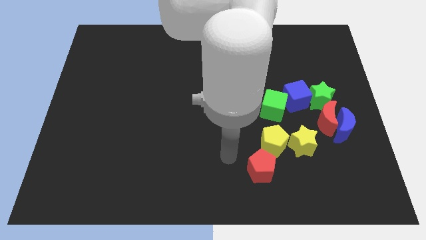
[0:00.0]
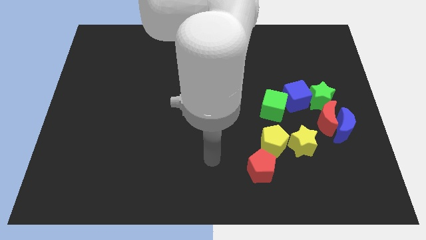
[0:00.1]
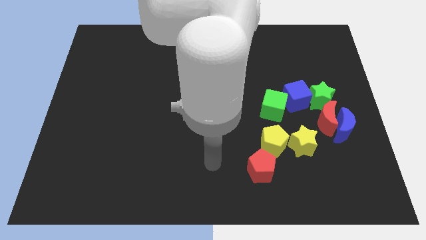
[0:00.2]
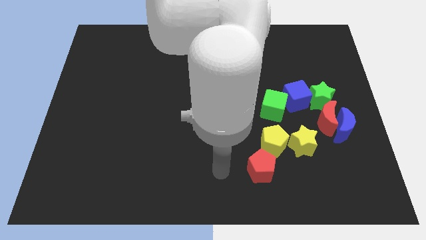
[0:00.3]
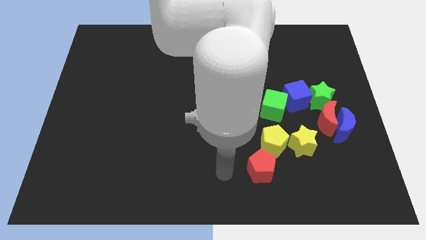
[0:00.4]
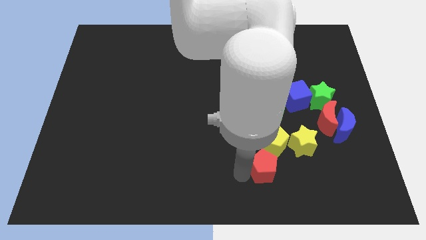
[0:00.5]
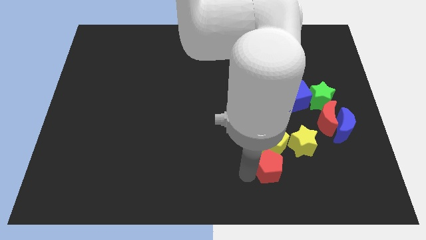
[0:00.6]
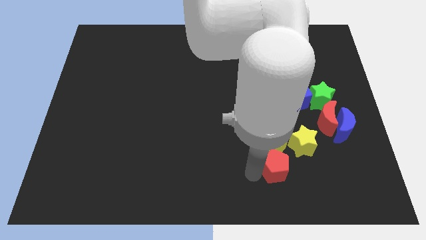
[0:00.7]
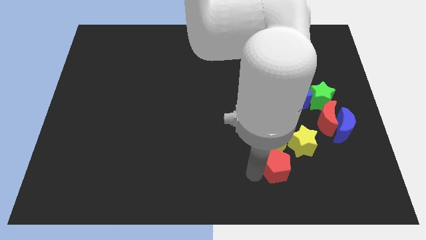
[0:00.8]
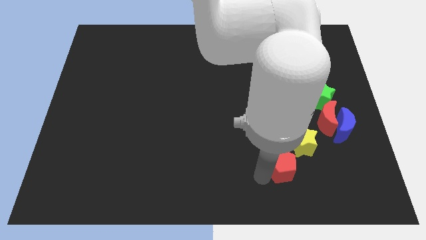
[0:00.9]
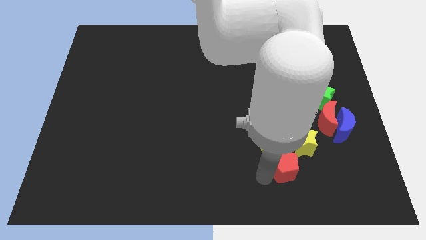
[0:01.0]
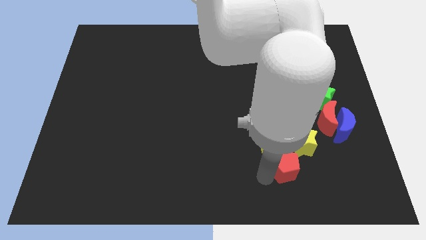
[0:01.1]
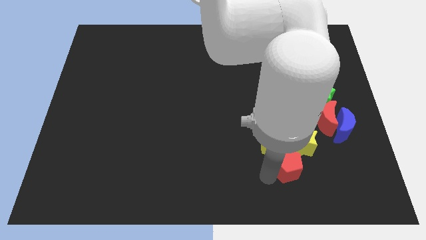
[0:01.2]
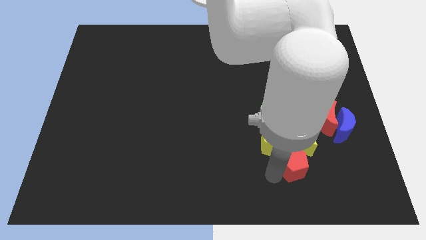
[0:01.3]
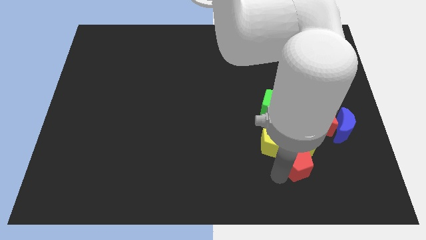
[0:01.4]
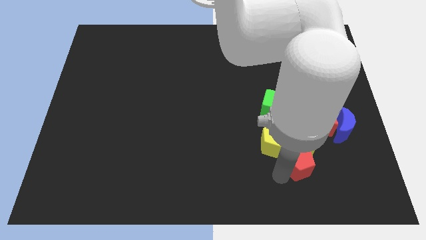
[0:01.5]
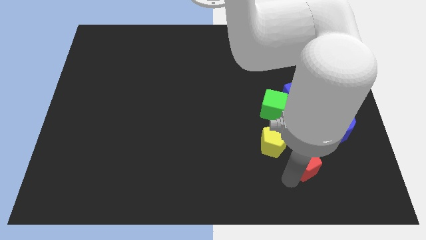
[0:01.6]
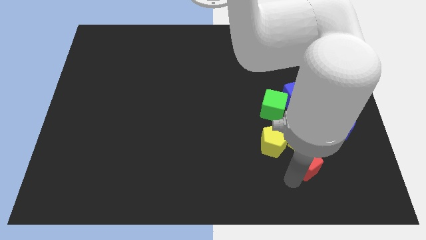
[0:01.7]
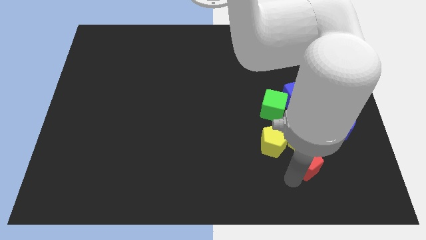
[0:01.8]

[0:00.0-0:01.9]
move the red pentagon into the group of blocks

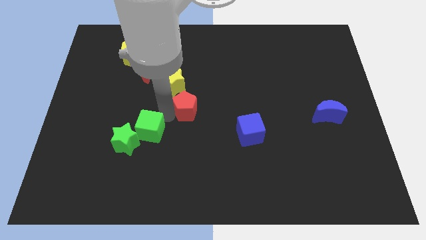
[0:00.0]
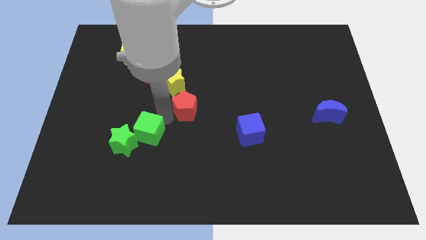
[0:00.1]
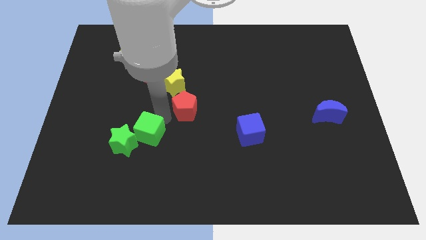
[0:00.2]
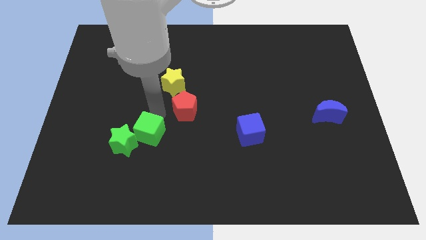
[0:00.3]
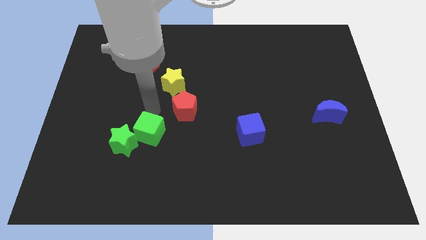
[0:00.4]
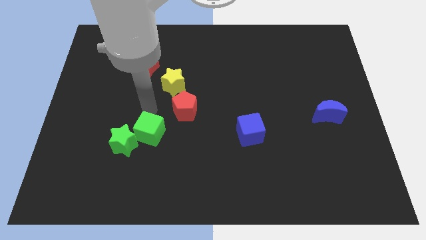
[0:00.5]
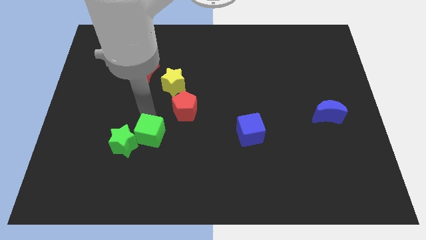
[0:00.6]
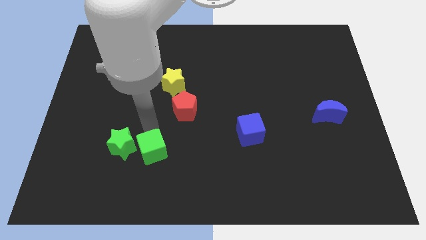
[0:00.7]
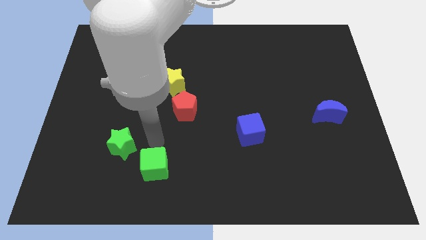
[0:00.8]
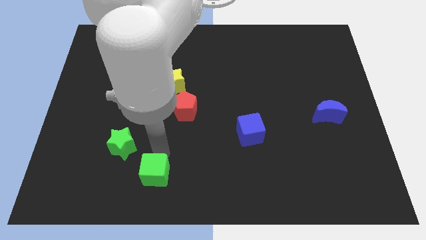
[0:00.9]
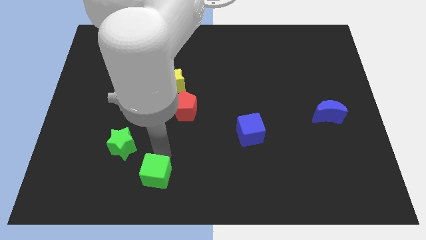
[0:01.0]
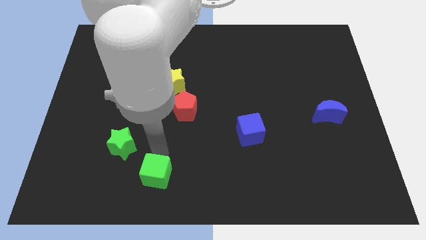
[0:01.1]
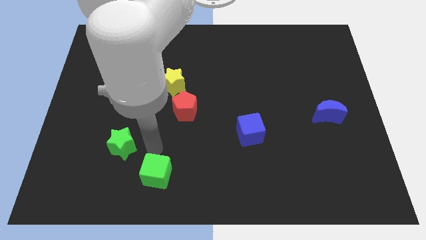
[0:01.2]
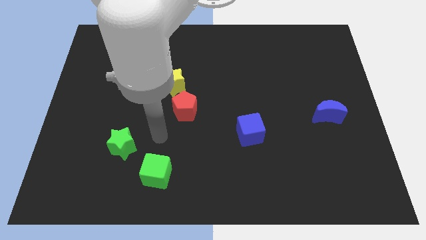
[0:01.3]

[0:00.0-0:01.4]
move the green cube to the bottom of the board

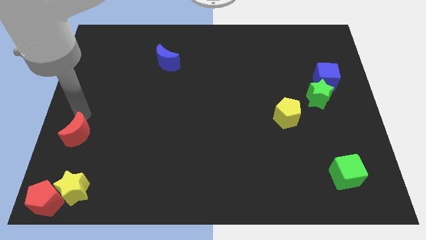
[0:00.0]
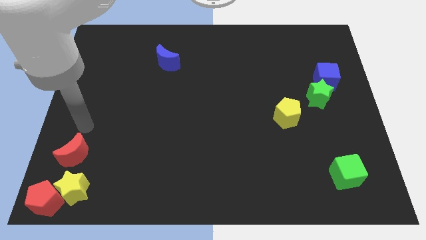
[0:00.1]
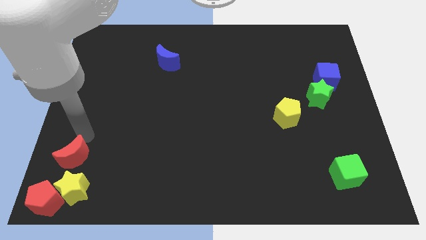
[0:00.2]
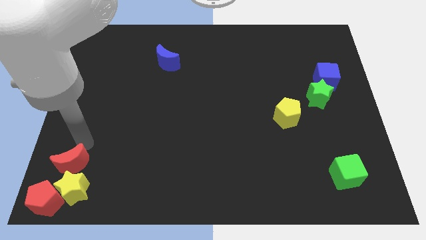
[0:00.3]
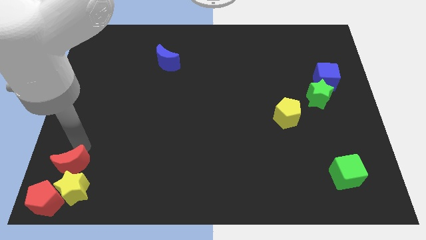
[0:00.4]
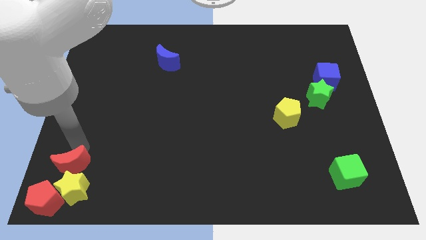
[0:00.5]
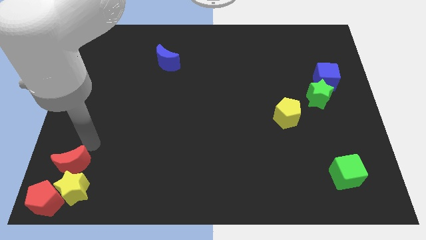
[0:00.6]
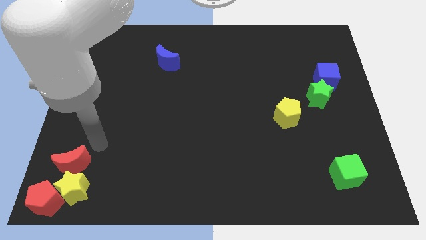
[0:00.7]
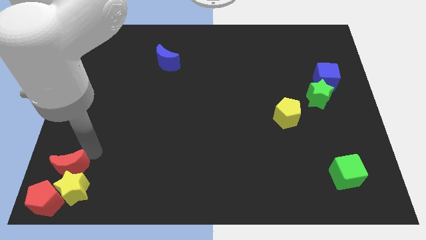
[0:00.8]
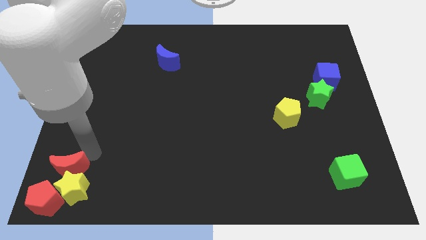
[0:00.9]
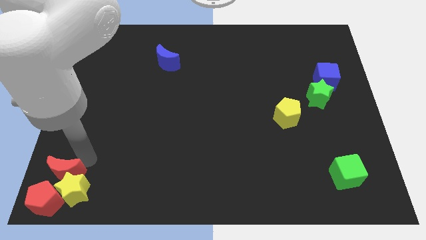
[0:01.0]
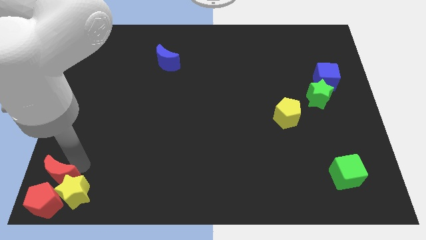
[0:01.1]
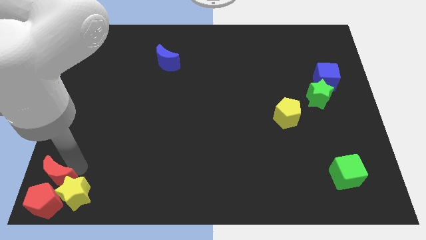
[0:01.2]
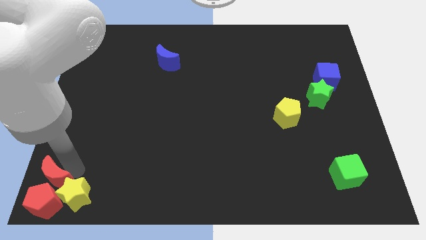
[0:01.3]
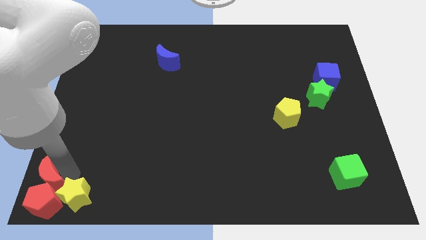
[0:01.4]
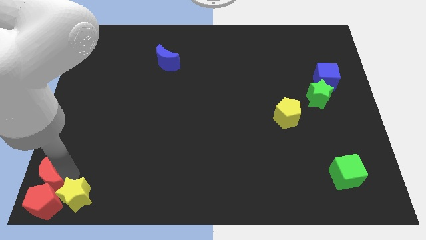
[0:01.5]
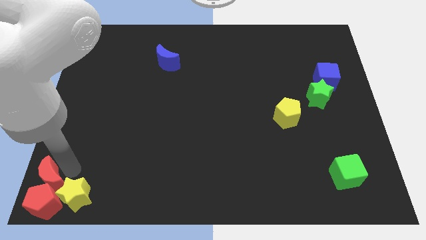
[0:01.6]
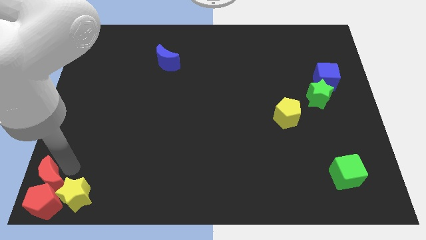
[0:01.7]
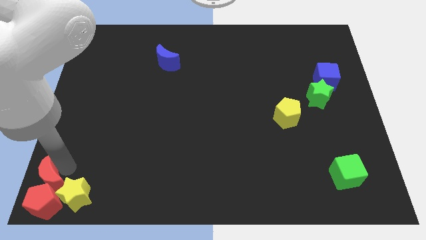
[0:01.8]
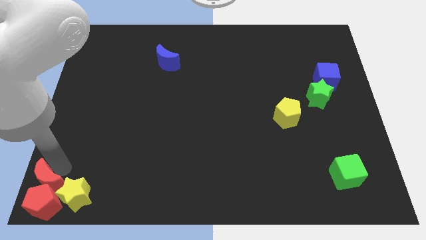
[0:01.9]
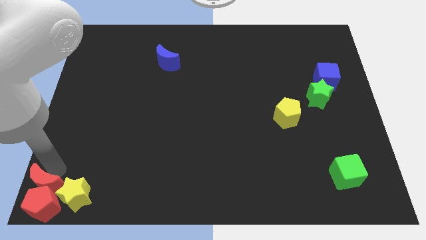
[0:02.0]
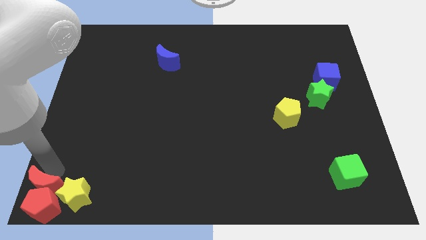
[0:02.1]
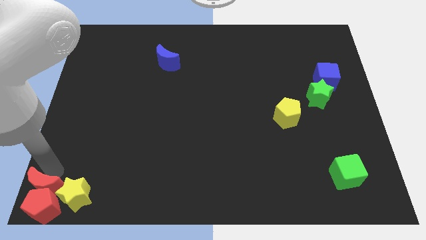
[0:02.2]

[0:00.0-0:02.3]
place red crescent above red pentagon

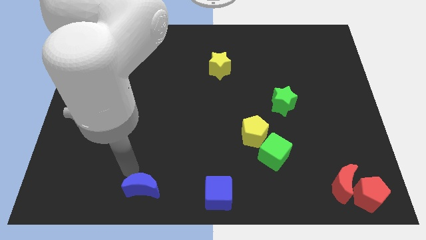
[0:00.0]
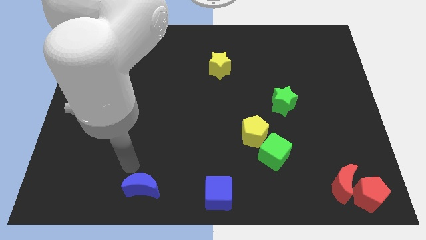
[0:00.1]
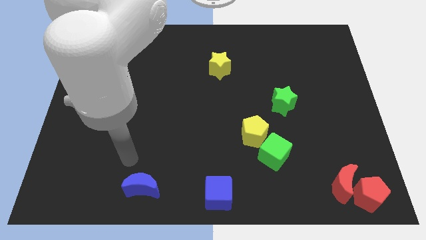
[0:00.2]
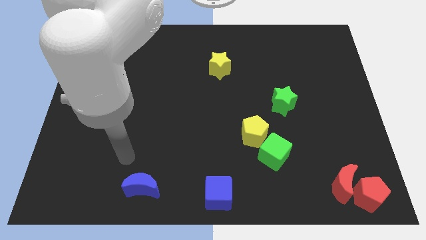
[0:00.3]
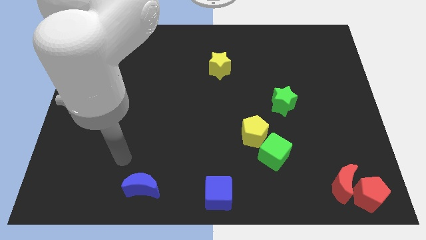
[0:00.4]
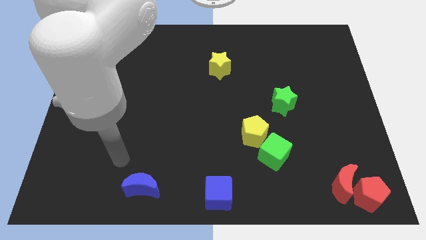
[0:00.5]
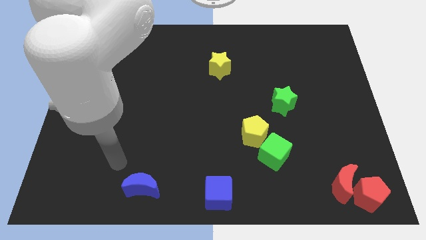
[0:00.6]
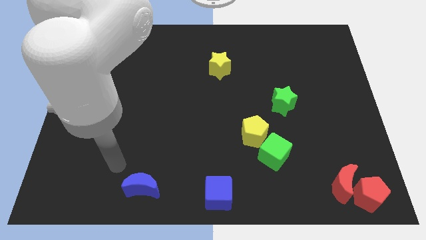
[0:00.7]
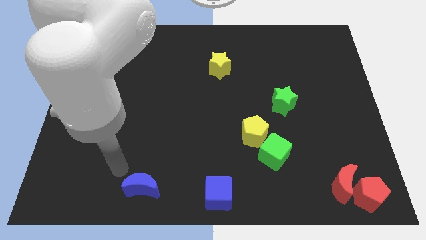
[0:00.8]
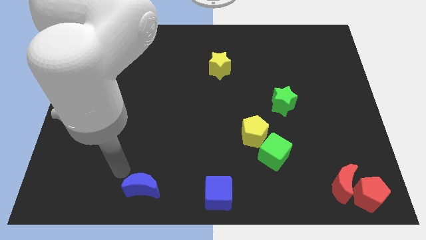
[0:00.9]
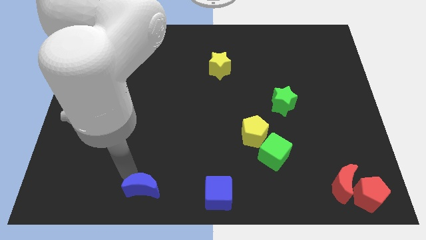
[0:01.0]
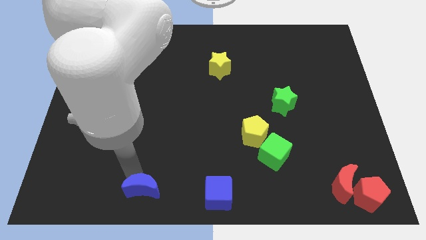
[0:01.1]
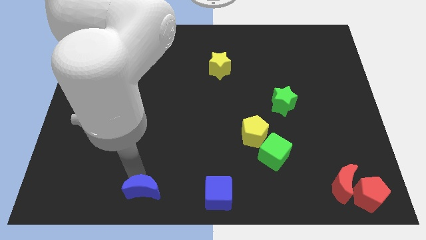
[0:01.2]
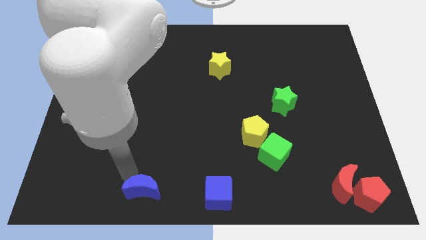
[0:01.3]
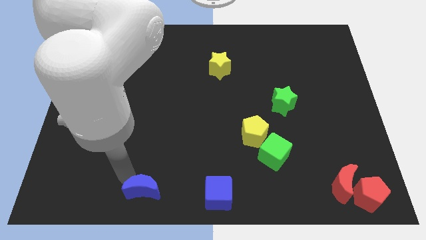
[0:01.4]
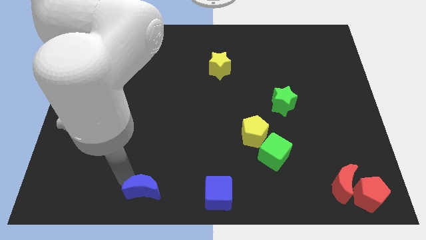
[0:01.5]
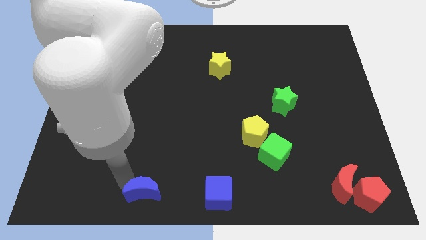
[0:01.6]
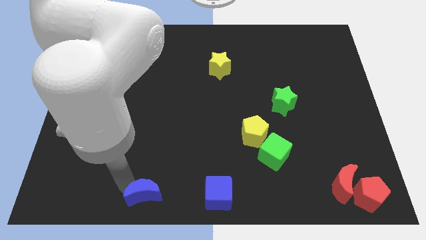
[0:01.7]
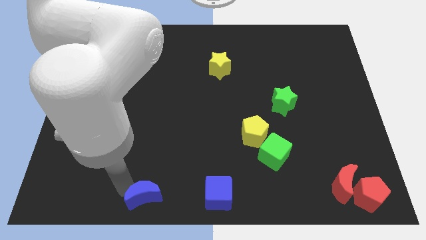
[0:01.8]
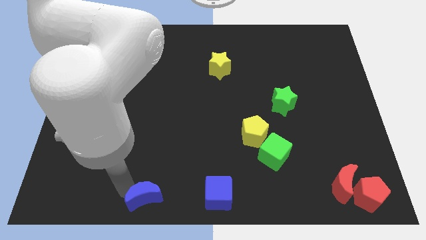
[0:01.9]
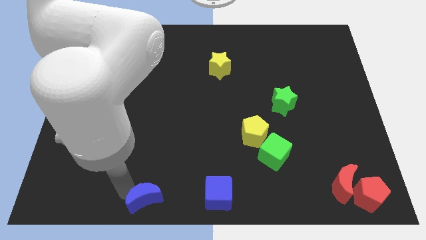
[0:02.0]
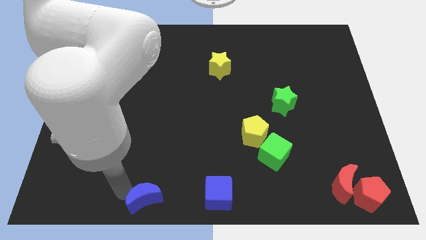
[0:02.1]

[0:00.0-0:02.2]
place blue moon to the left of blue cube

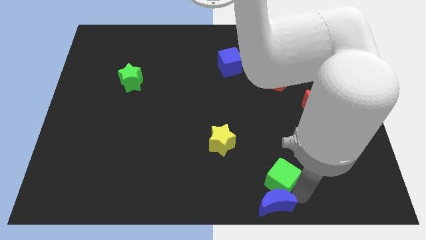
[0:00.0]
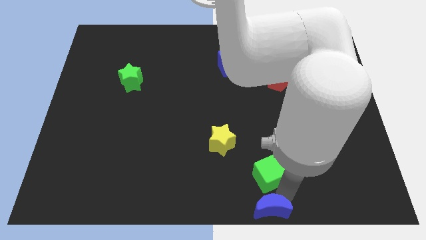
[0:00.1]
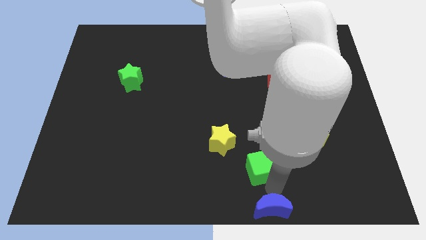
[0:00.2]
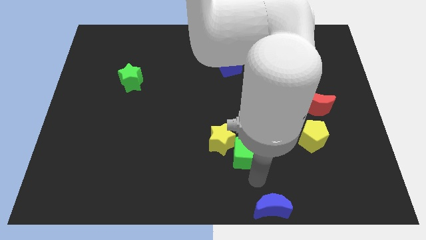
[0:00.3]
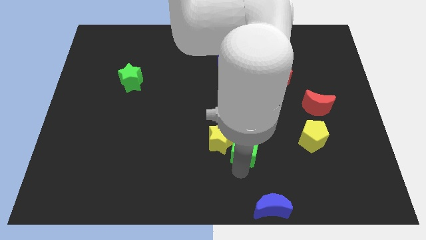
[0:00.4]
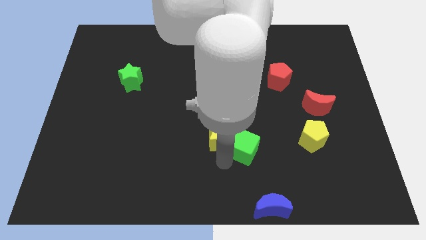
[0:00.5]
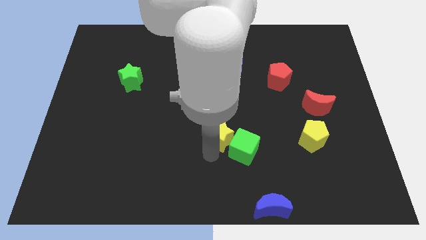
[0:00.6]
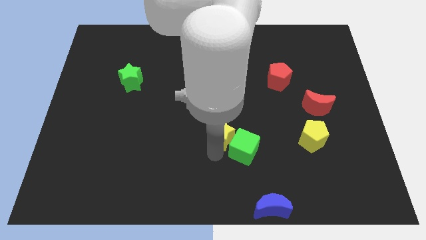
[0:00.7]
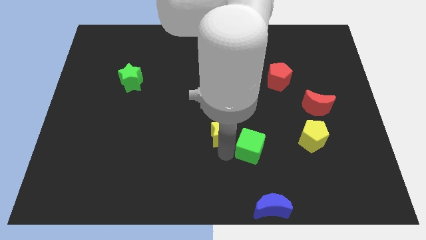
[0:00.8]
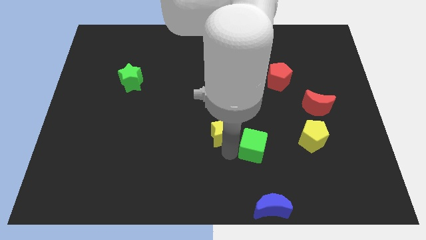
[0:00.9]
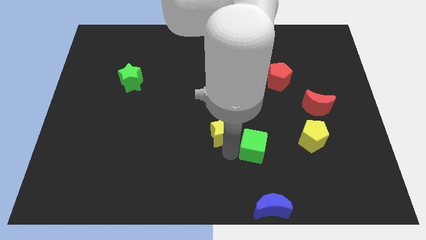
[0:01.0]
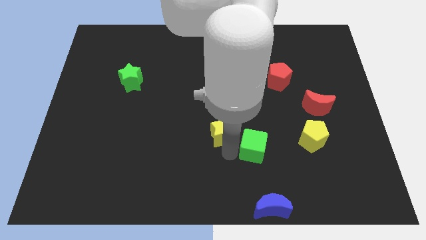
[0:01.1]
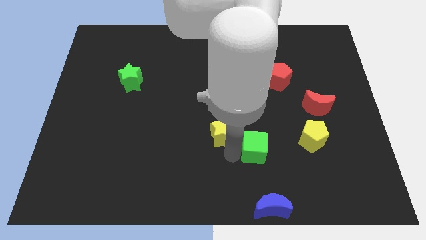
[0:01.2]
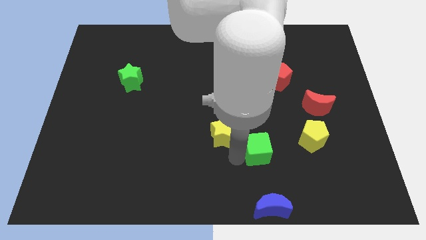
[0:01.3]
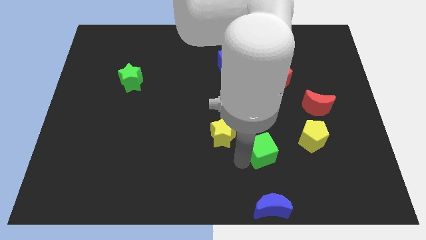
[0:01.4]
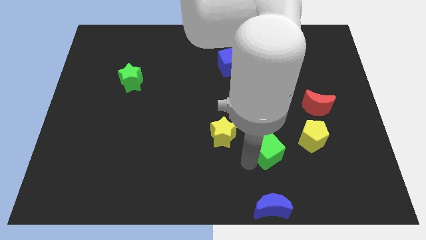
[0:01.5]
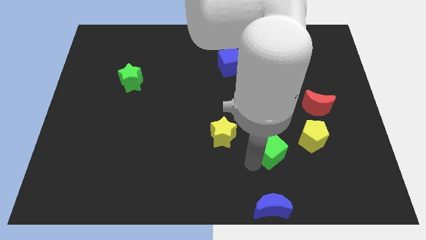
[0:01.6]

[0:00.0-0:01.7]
move the green cube away from the blue moon
